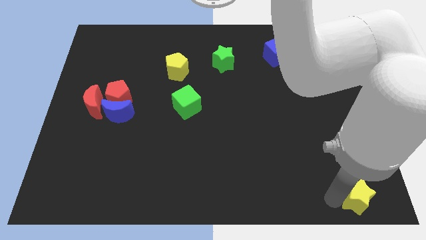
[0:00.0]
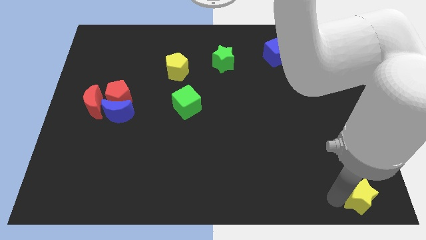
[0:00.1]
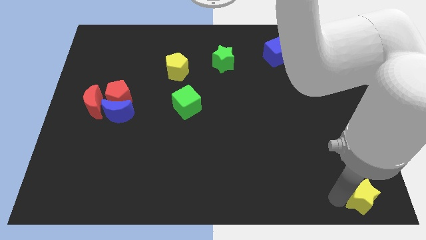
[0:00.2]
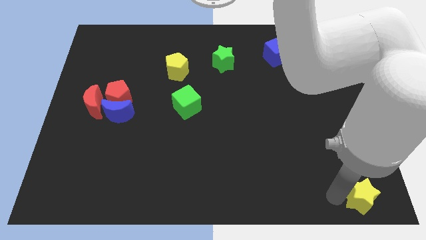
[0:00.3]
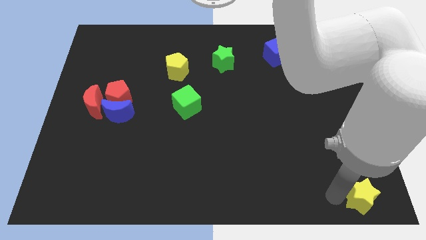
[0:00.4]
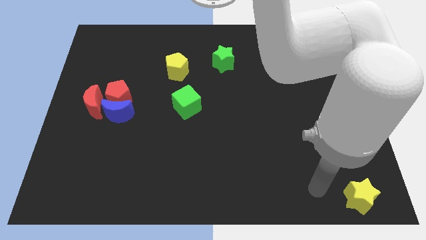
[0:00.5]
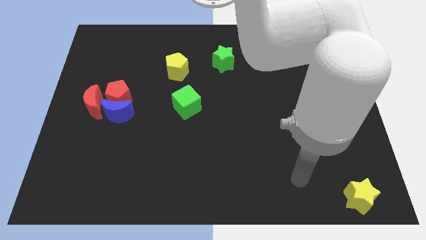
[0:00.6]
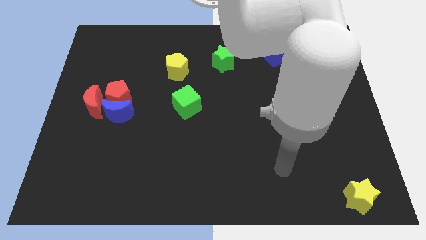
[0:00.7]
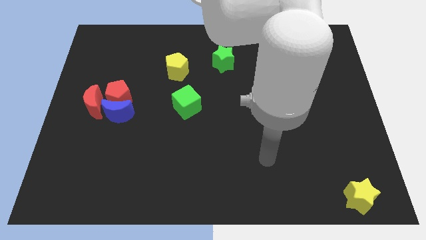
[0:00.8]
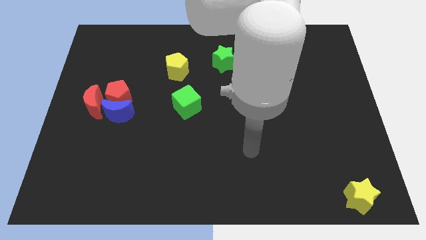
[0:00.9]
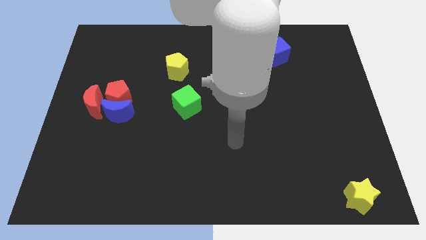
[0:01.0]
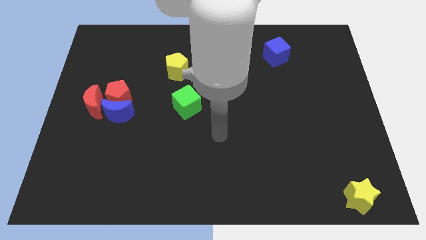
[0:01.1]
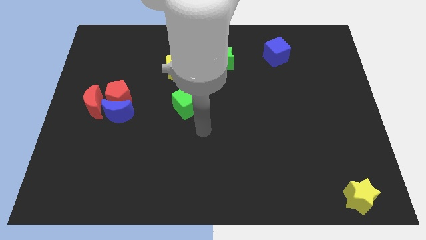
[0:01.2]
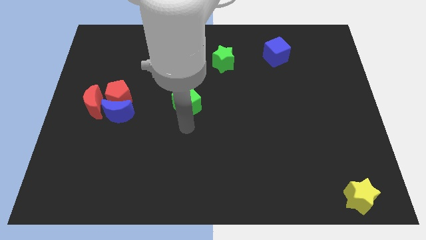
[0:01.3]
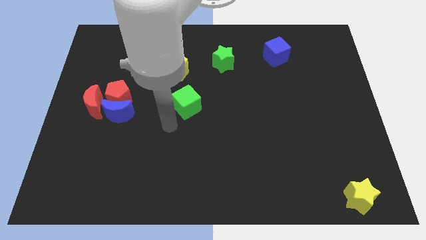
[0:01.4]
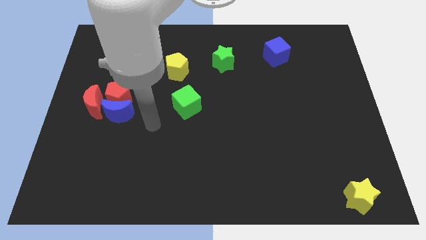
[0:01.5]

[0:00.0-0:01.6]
move your arm away from the yellow star

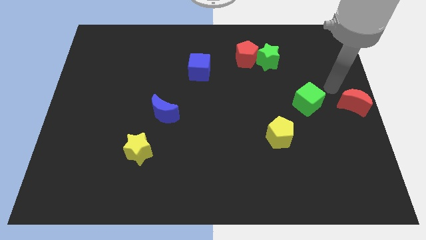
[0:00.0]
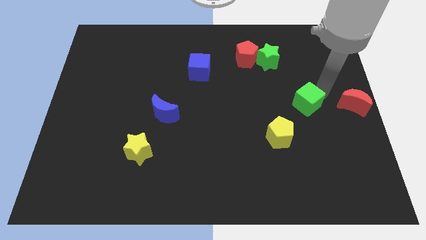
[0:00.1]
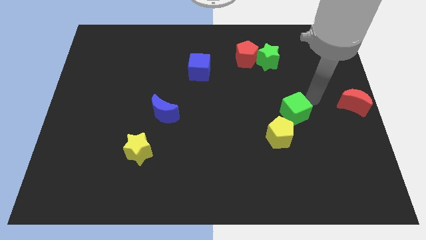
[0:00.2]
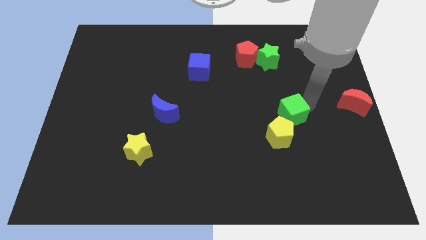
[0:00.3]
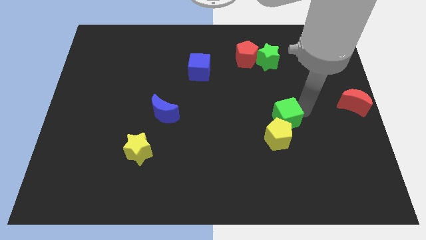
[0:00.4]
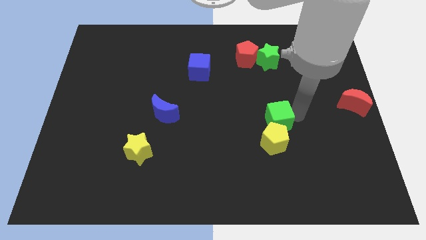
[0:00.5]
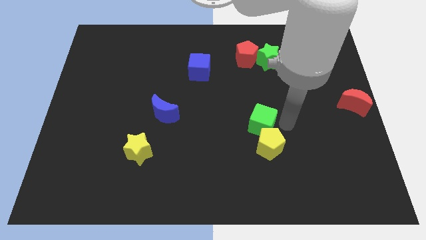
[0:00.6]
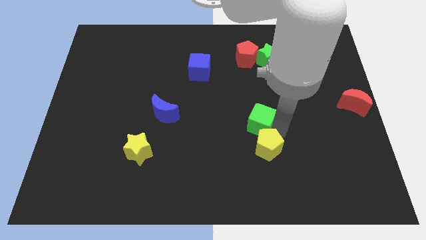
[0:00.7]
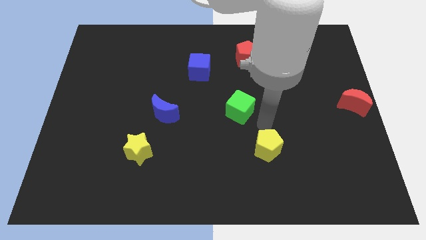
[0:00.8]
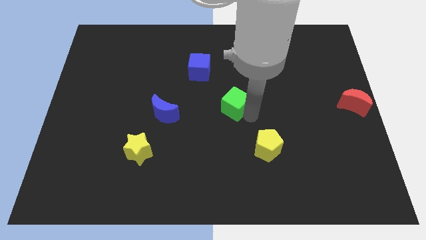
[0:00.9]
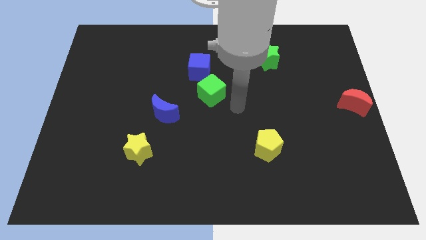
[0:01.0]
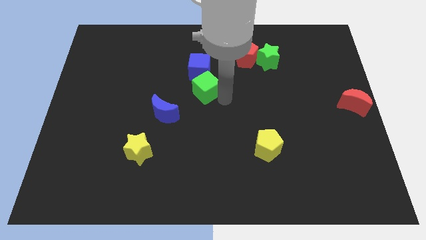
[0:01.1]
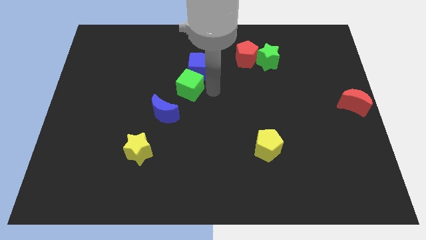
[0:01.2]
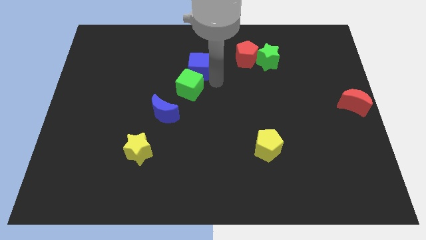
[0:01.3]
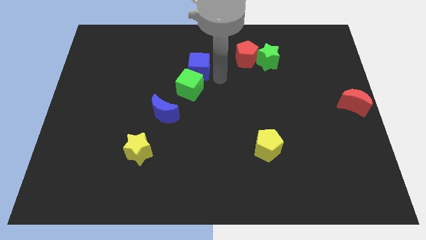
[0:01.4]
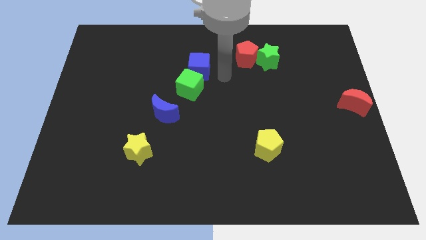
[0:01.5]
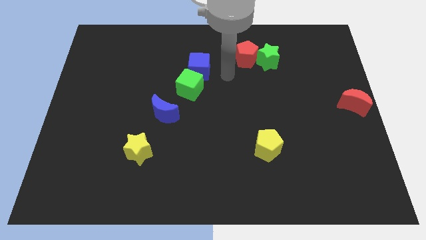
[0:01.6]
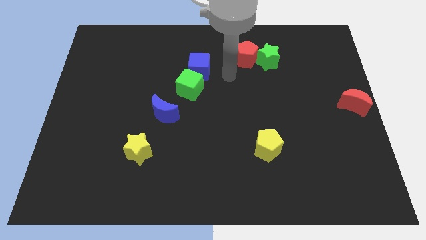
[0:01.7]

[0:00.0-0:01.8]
place the green cube in between the blue blocks

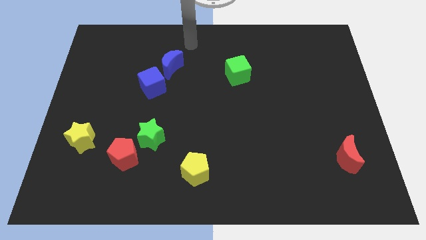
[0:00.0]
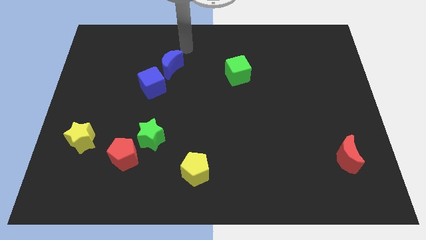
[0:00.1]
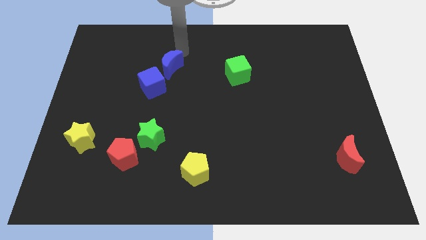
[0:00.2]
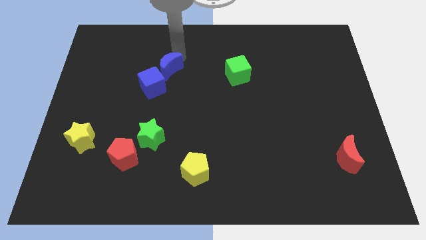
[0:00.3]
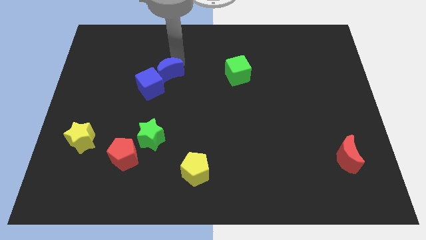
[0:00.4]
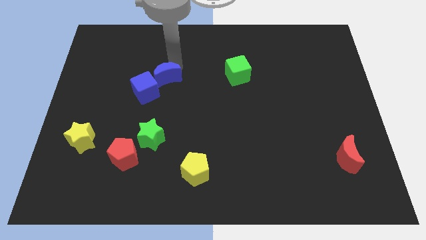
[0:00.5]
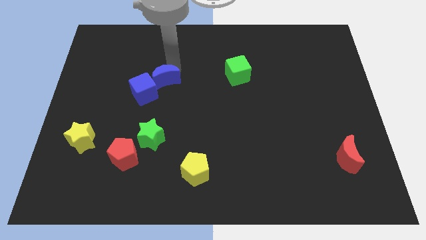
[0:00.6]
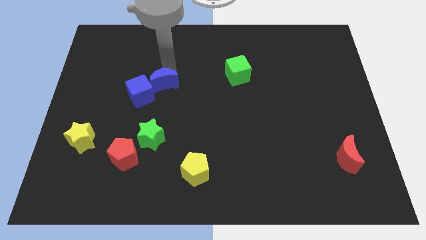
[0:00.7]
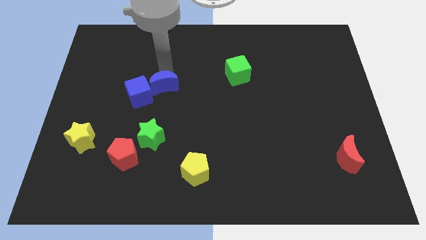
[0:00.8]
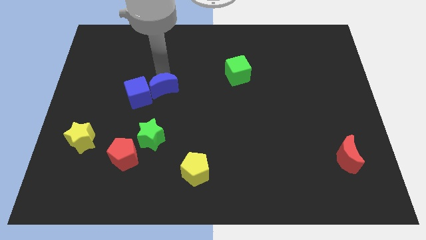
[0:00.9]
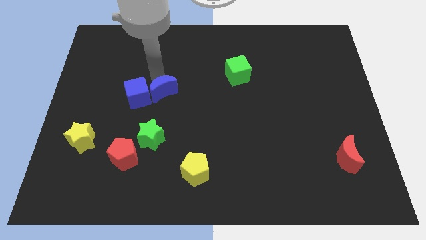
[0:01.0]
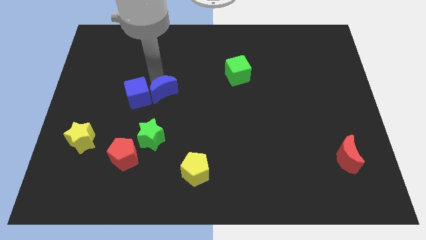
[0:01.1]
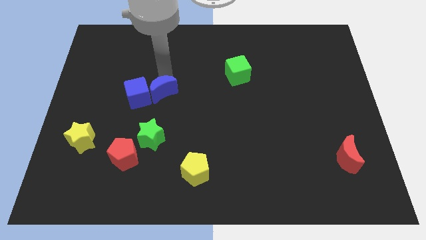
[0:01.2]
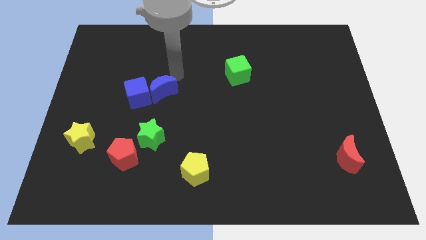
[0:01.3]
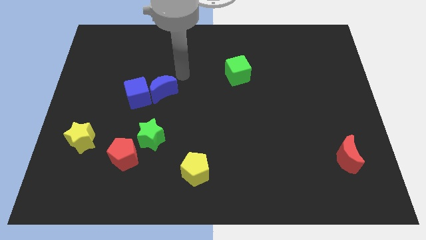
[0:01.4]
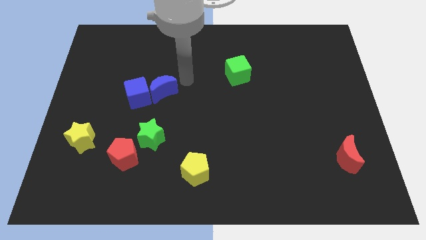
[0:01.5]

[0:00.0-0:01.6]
push the blue moon downwards

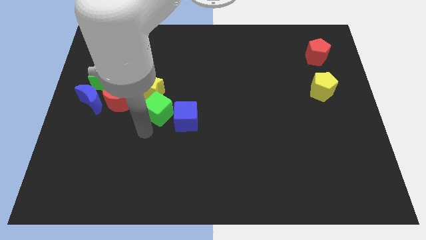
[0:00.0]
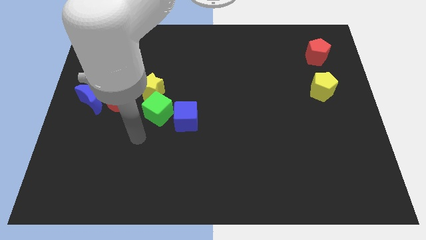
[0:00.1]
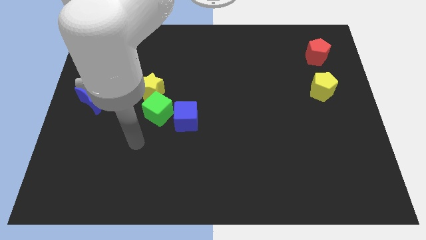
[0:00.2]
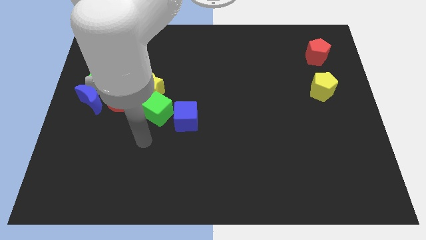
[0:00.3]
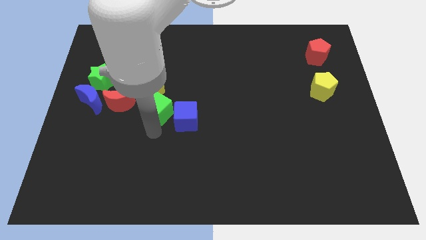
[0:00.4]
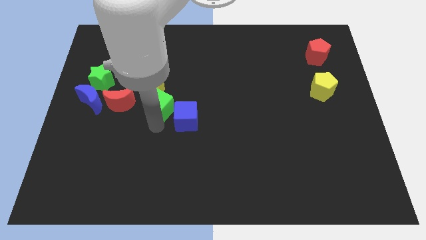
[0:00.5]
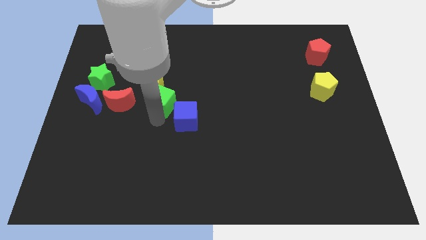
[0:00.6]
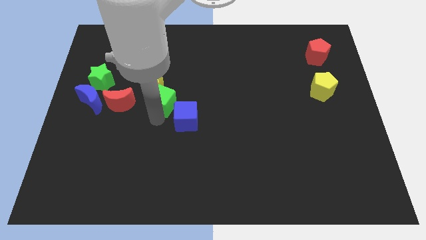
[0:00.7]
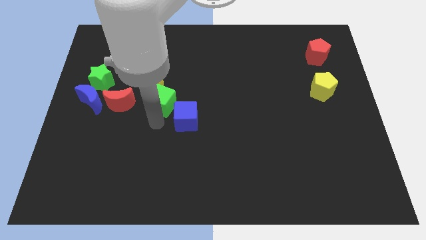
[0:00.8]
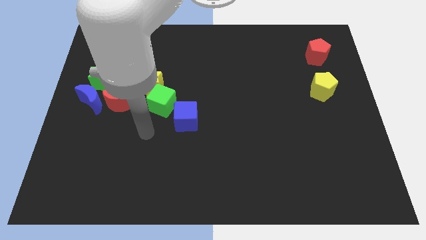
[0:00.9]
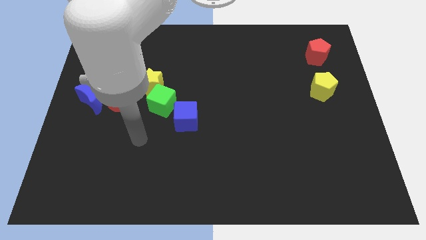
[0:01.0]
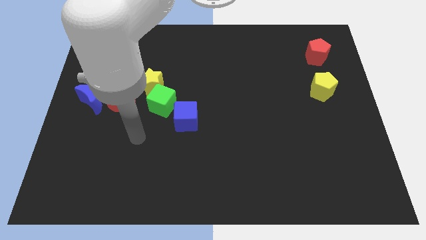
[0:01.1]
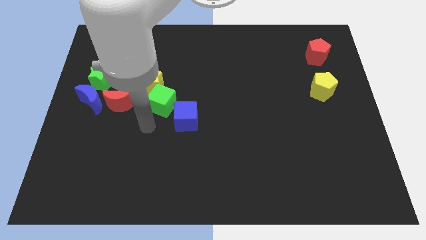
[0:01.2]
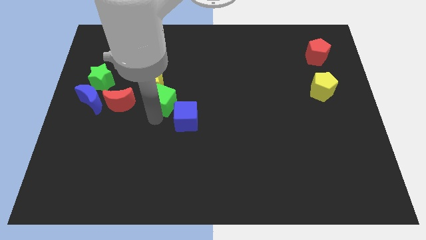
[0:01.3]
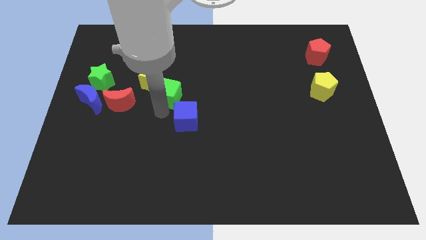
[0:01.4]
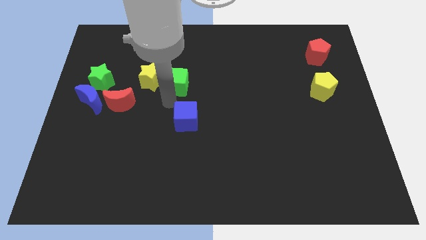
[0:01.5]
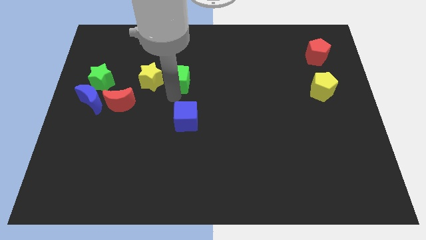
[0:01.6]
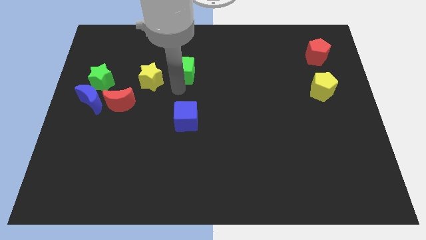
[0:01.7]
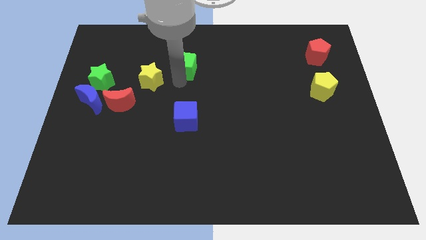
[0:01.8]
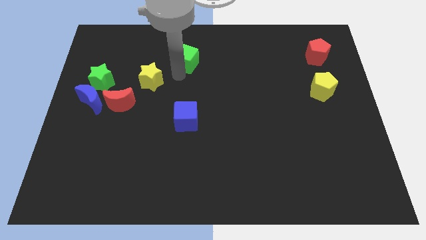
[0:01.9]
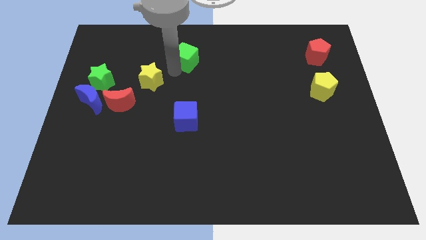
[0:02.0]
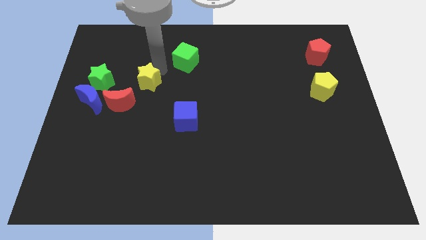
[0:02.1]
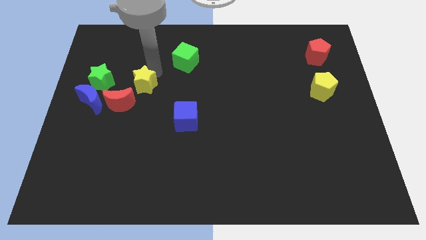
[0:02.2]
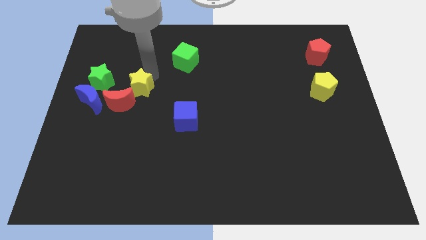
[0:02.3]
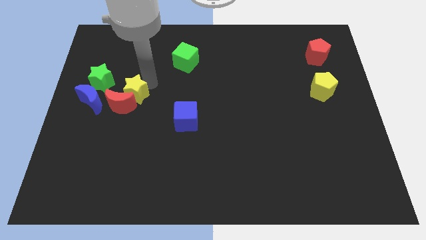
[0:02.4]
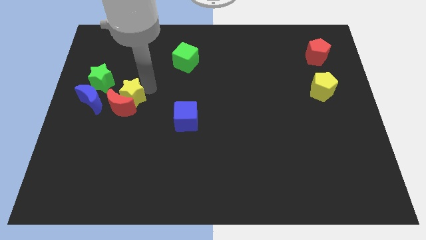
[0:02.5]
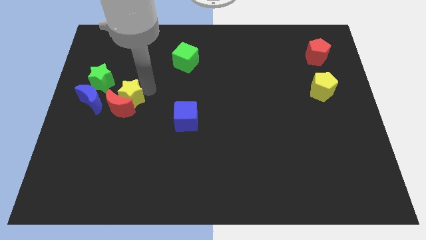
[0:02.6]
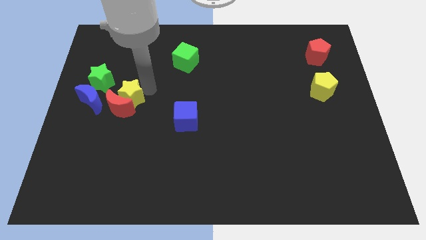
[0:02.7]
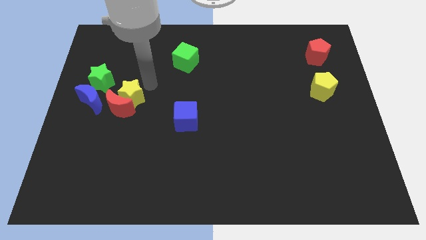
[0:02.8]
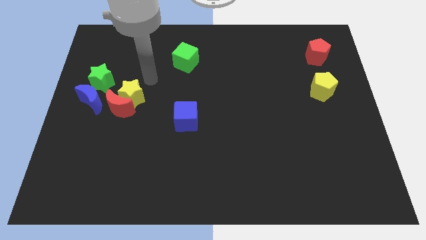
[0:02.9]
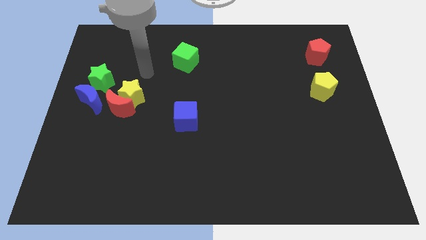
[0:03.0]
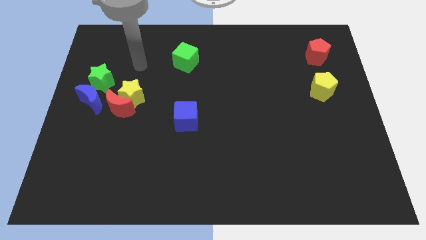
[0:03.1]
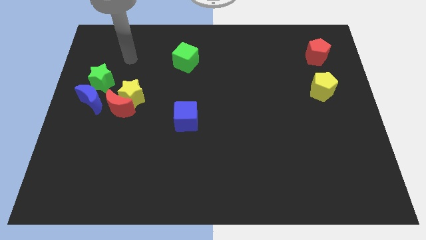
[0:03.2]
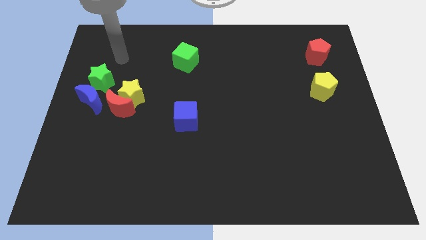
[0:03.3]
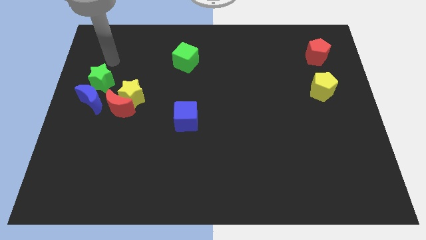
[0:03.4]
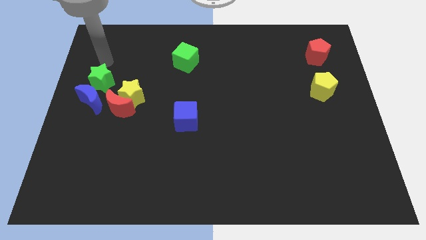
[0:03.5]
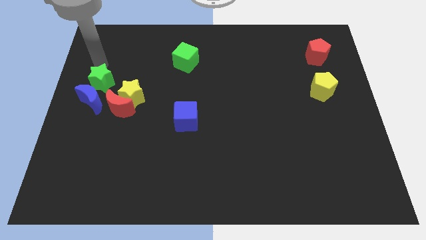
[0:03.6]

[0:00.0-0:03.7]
place green cube to the top of blue cube

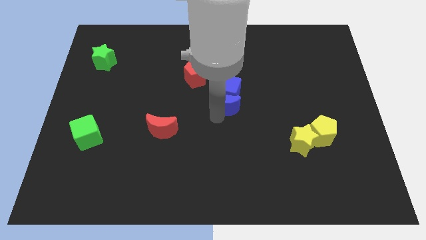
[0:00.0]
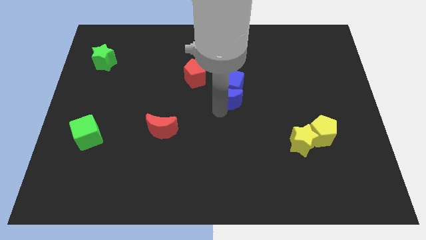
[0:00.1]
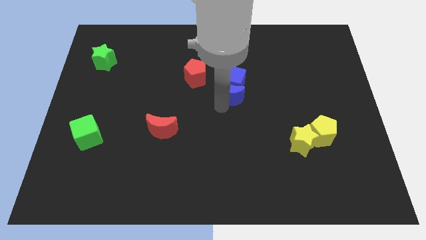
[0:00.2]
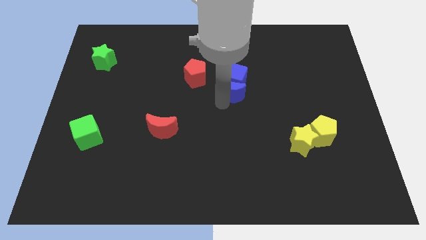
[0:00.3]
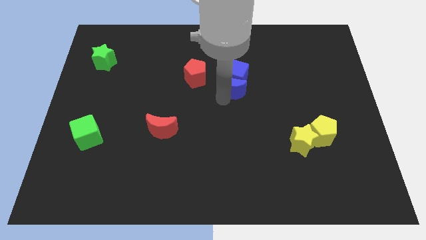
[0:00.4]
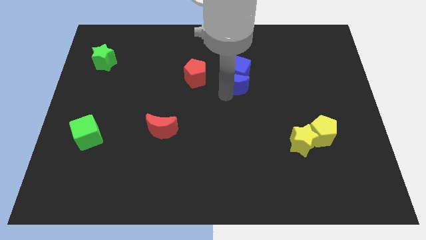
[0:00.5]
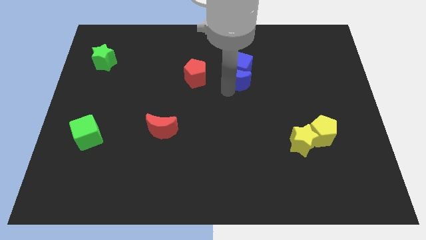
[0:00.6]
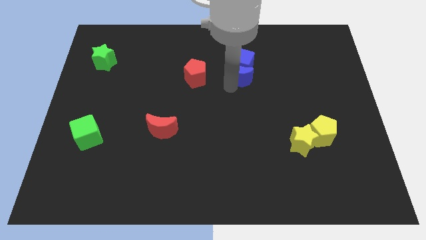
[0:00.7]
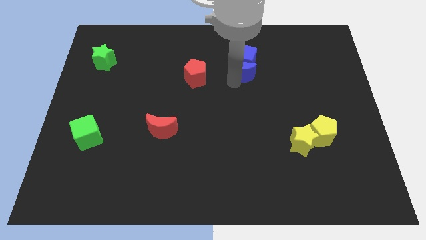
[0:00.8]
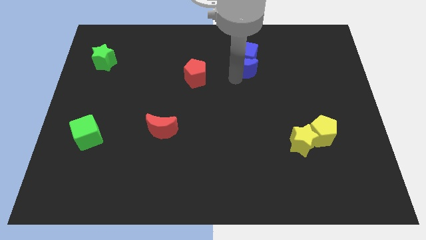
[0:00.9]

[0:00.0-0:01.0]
move the blue moon and the blue cube towards top
